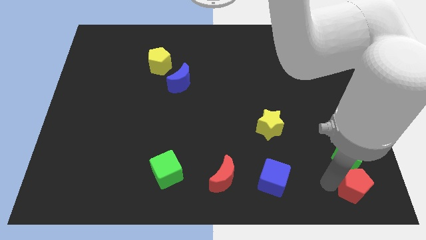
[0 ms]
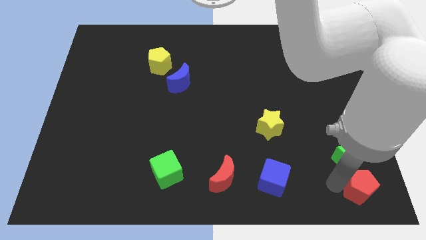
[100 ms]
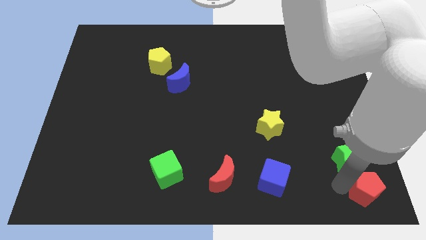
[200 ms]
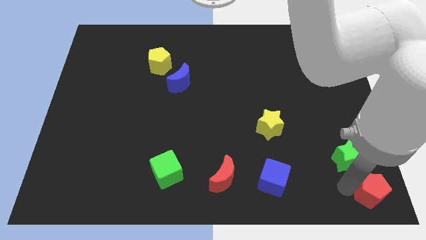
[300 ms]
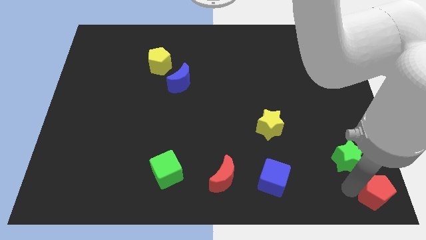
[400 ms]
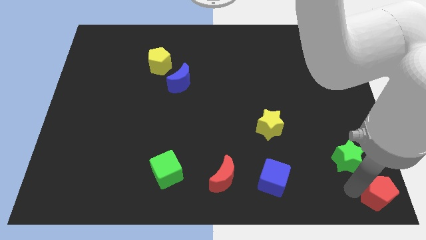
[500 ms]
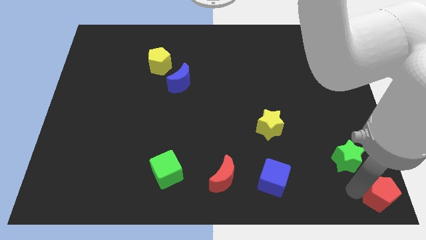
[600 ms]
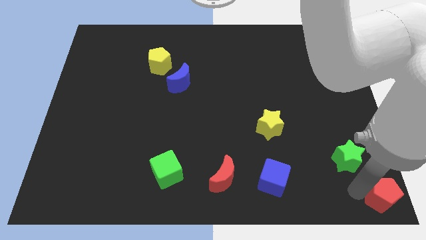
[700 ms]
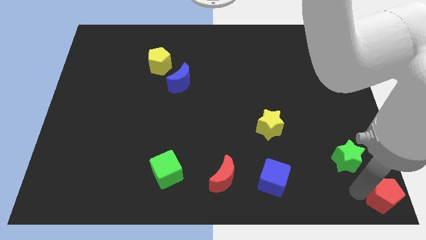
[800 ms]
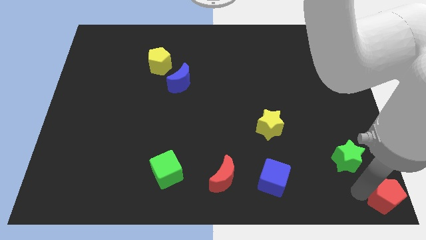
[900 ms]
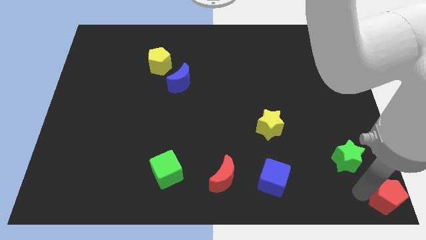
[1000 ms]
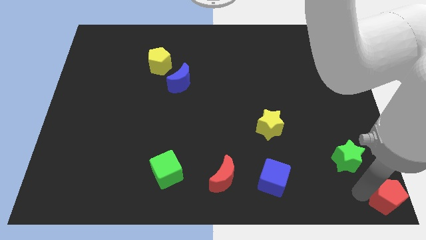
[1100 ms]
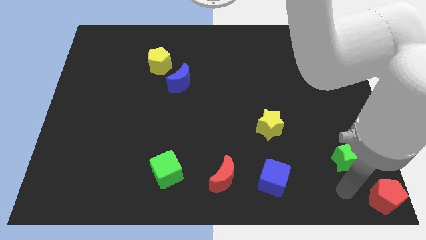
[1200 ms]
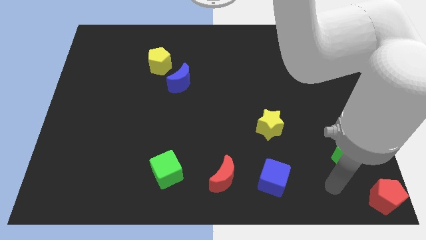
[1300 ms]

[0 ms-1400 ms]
place the red pentagon diagonally top left to the green star

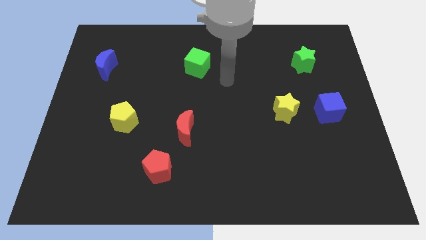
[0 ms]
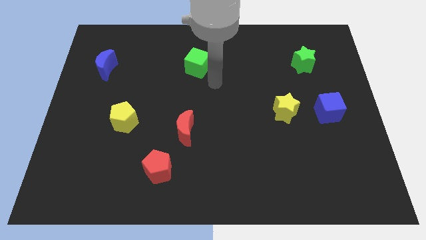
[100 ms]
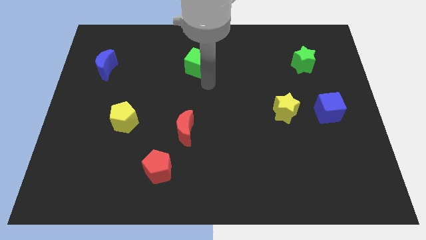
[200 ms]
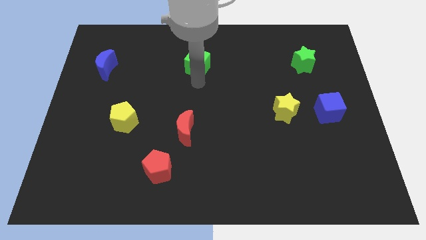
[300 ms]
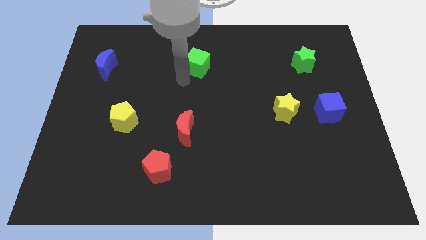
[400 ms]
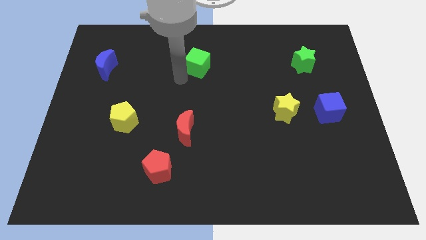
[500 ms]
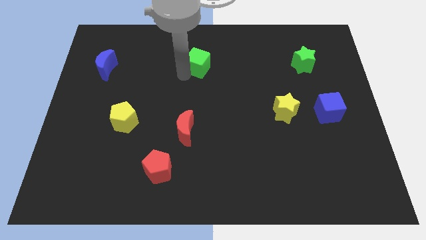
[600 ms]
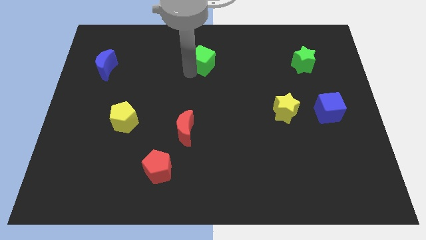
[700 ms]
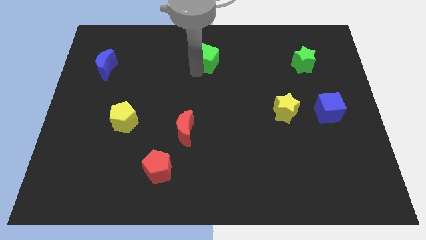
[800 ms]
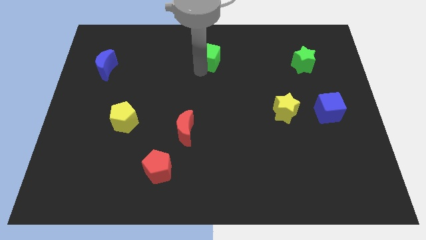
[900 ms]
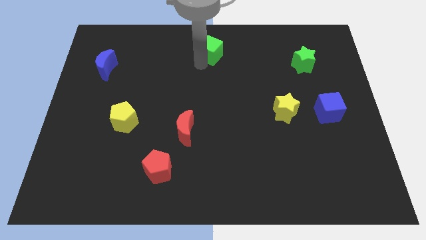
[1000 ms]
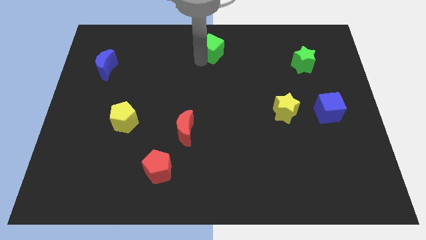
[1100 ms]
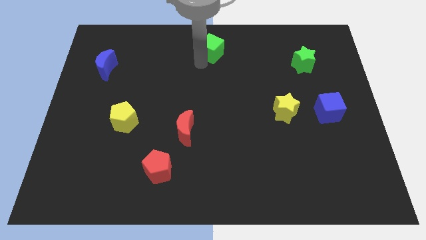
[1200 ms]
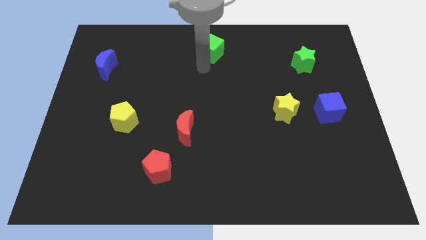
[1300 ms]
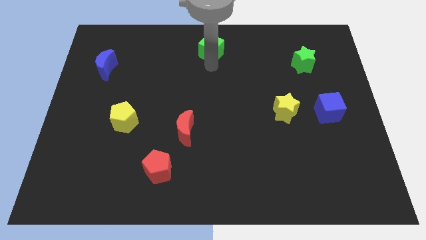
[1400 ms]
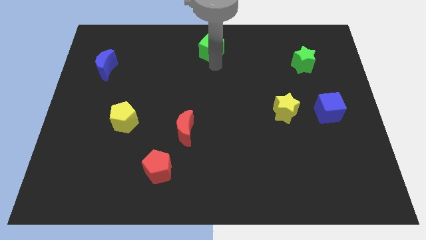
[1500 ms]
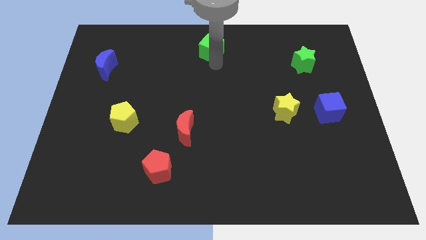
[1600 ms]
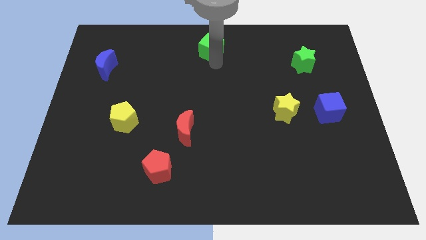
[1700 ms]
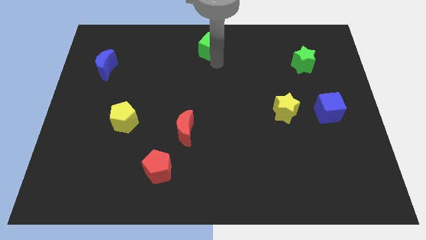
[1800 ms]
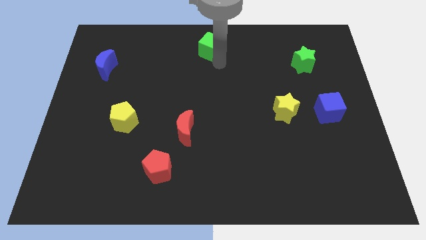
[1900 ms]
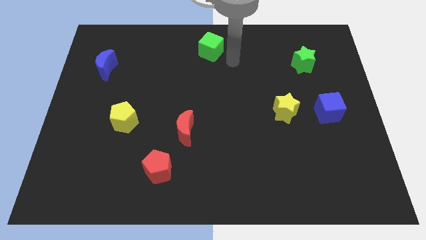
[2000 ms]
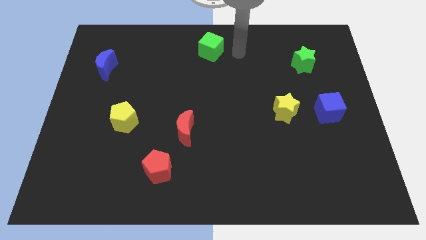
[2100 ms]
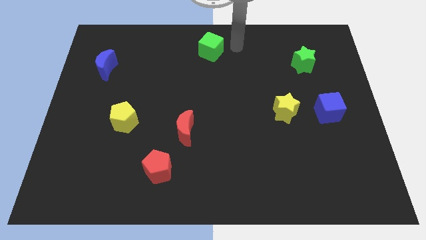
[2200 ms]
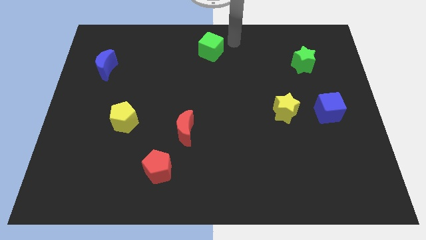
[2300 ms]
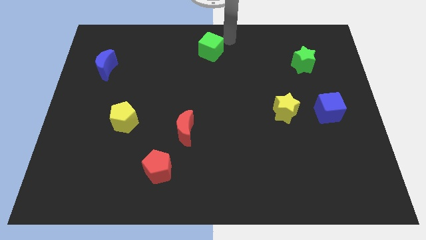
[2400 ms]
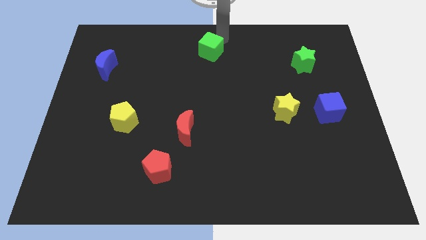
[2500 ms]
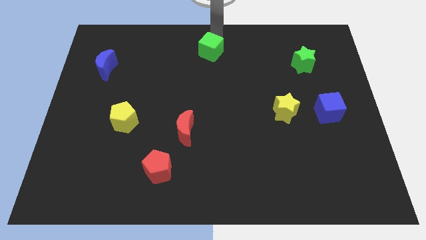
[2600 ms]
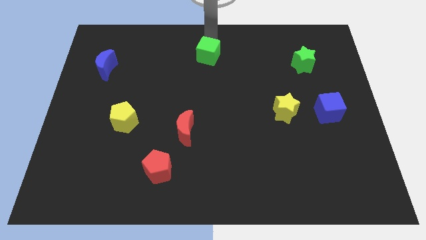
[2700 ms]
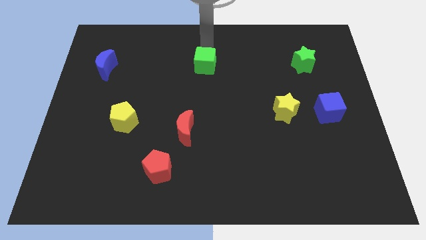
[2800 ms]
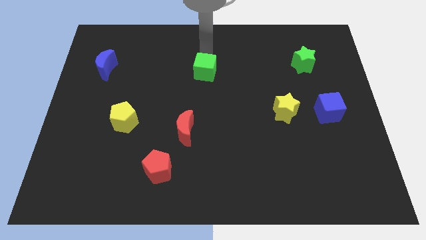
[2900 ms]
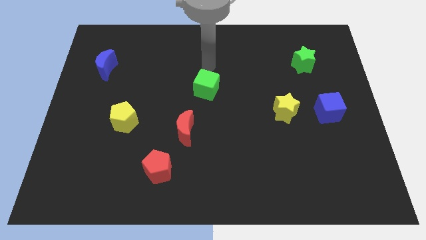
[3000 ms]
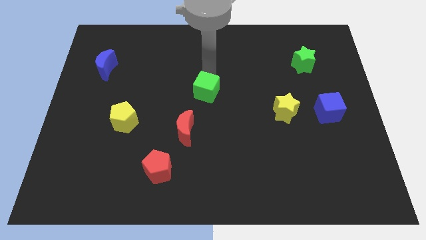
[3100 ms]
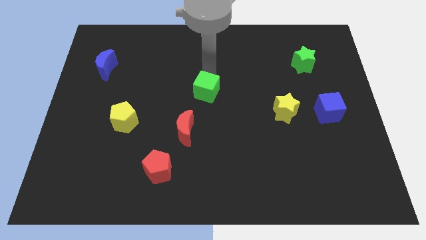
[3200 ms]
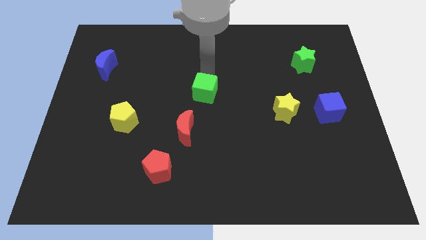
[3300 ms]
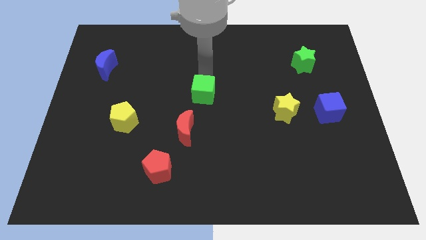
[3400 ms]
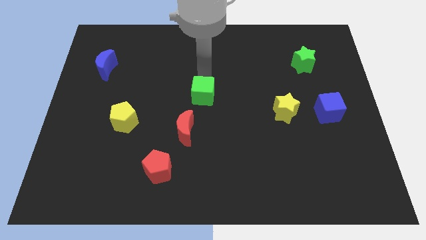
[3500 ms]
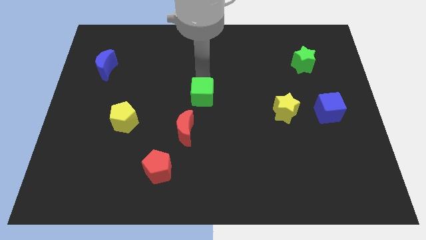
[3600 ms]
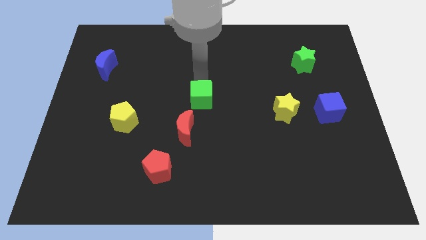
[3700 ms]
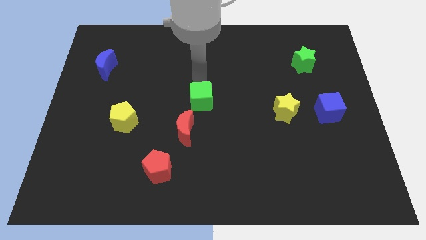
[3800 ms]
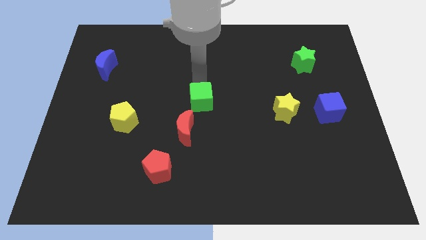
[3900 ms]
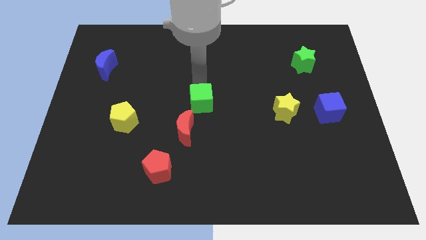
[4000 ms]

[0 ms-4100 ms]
put the green cube at the center of the board

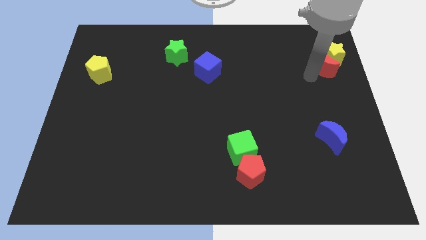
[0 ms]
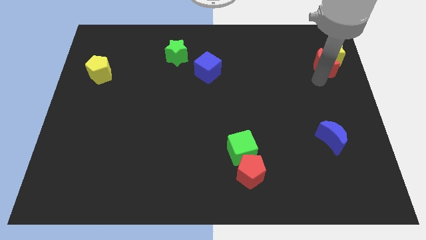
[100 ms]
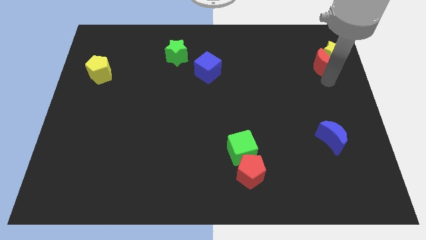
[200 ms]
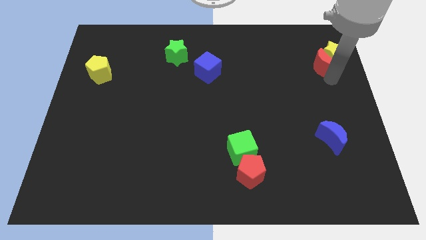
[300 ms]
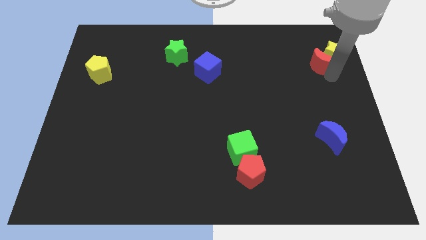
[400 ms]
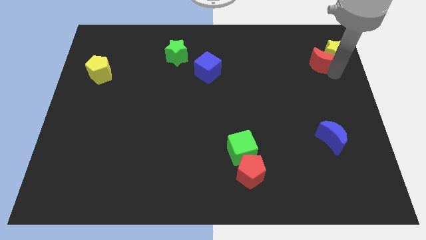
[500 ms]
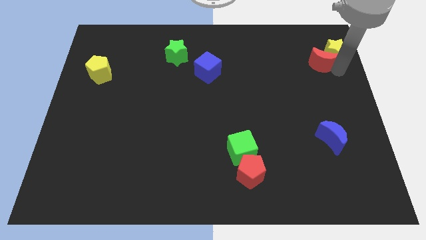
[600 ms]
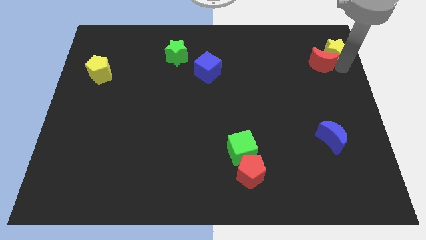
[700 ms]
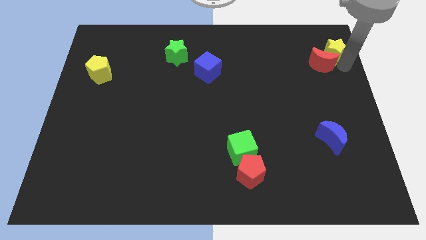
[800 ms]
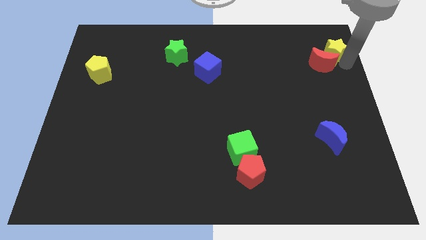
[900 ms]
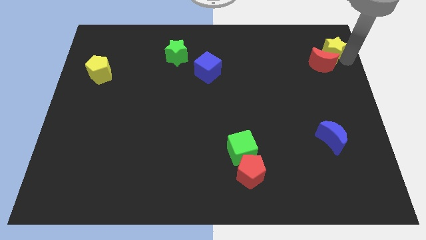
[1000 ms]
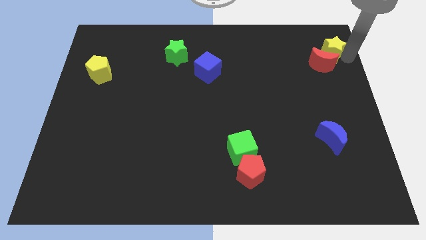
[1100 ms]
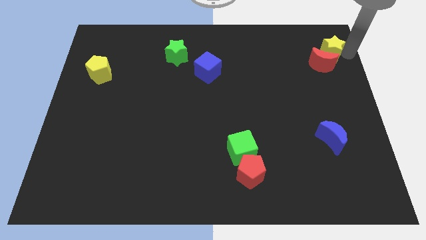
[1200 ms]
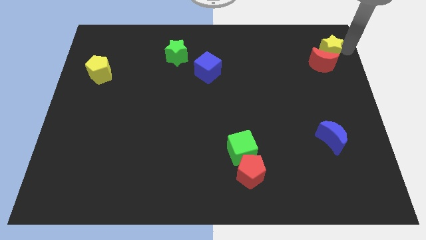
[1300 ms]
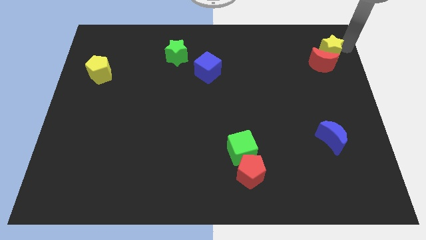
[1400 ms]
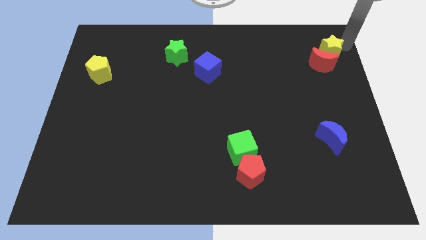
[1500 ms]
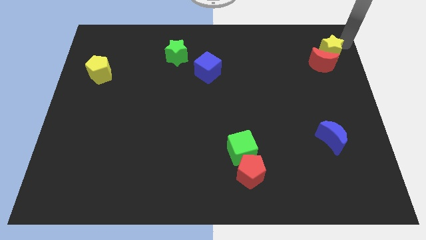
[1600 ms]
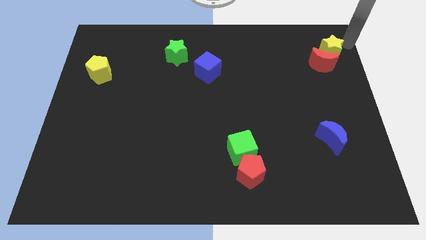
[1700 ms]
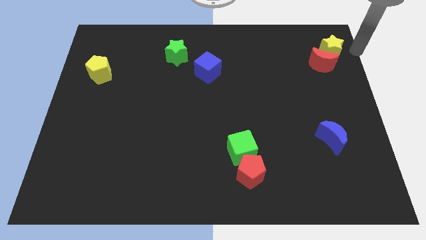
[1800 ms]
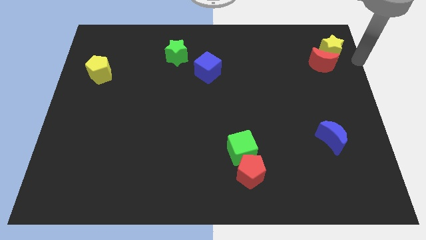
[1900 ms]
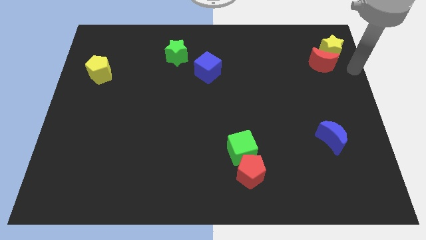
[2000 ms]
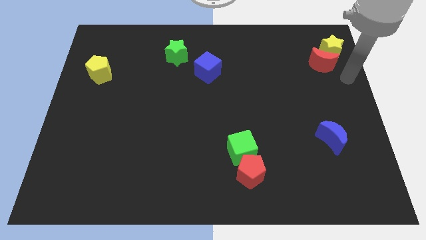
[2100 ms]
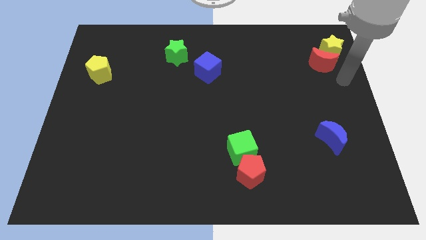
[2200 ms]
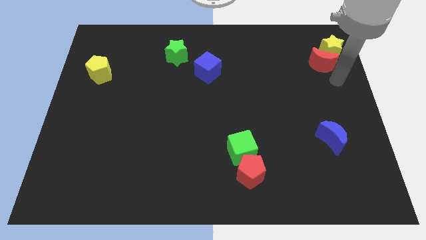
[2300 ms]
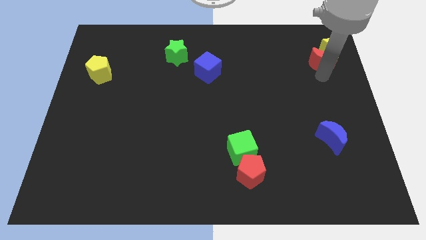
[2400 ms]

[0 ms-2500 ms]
place the arm down to the red moon

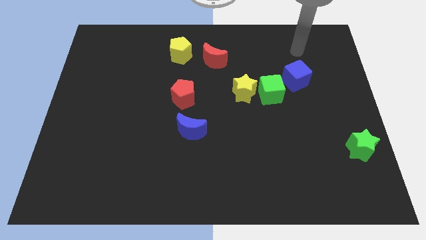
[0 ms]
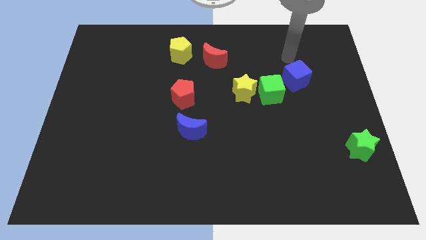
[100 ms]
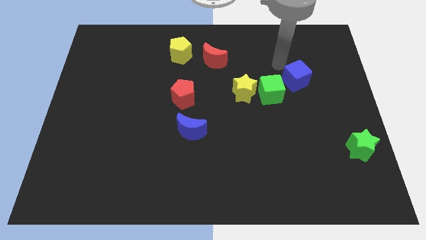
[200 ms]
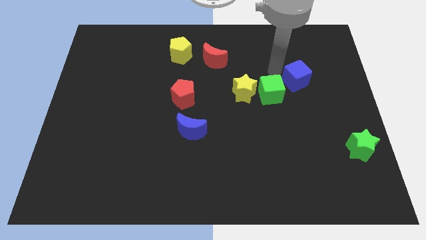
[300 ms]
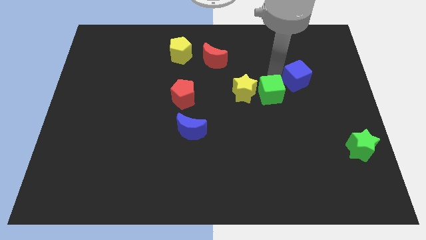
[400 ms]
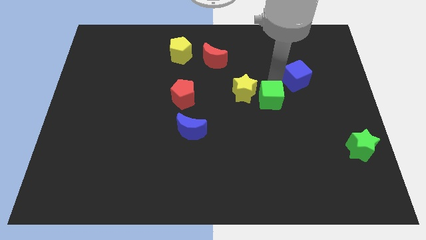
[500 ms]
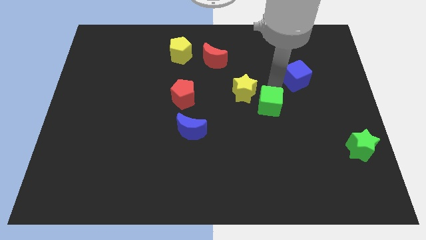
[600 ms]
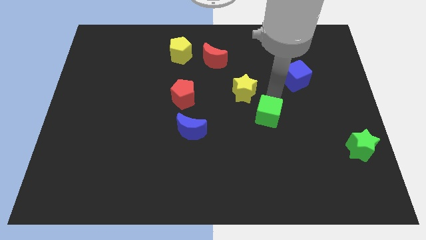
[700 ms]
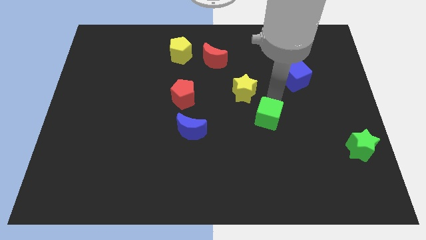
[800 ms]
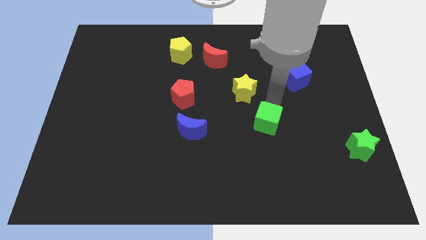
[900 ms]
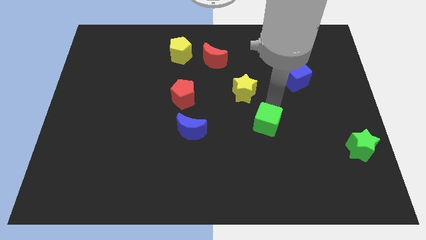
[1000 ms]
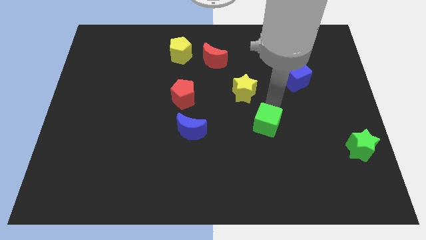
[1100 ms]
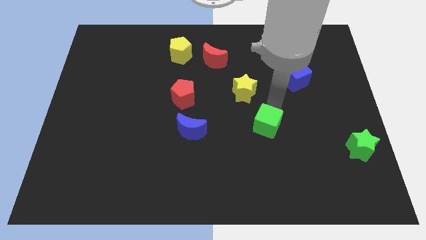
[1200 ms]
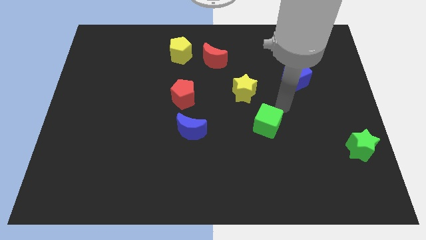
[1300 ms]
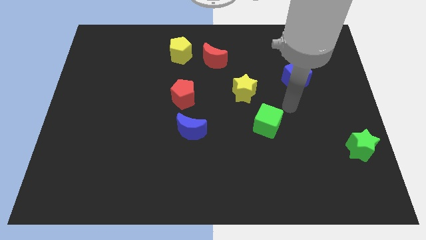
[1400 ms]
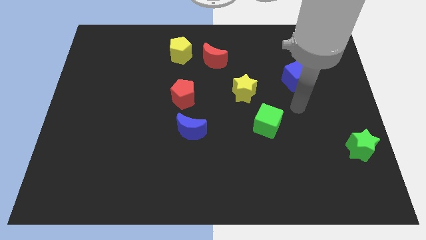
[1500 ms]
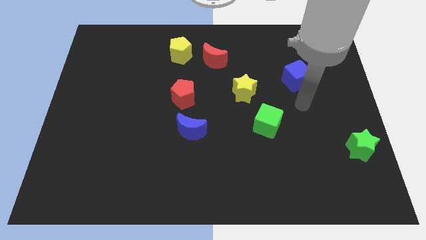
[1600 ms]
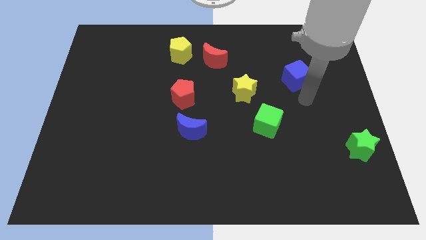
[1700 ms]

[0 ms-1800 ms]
slide the green cube towards the bottom side
